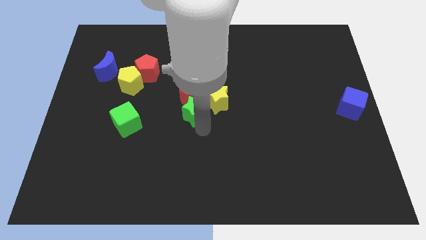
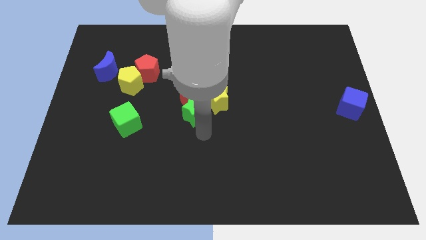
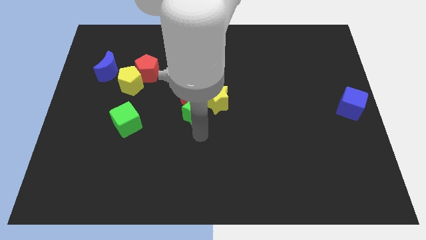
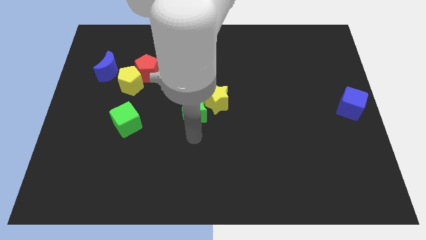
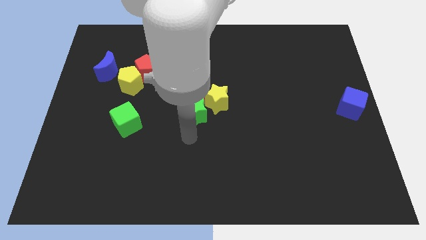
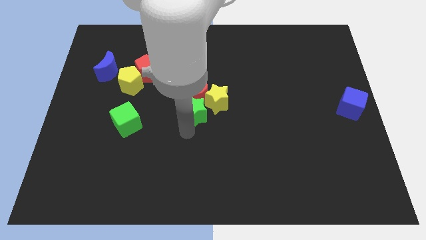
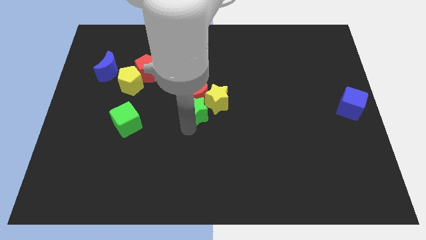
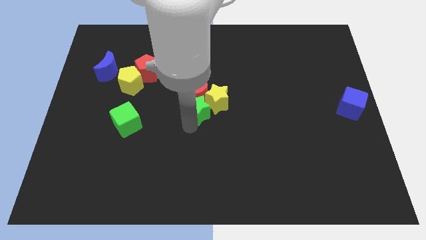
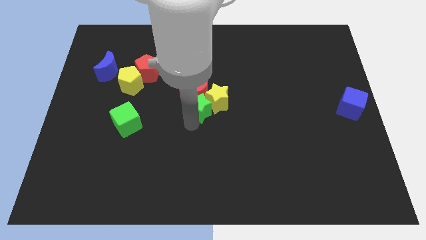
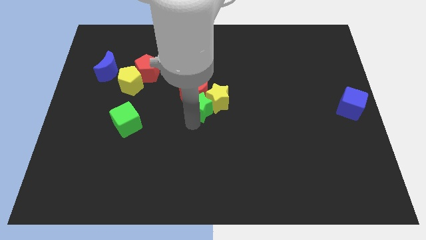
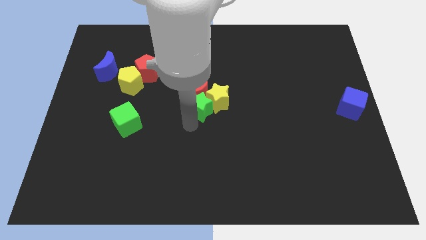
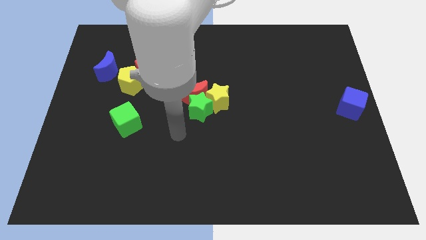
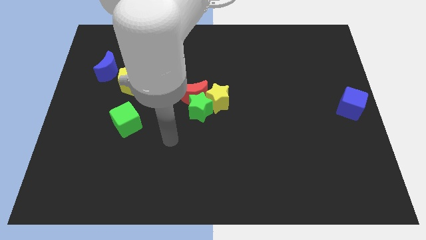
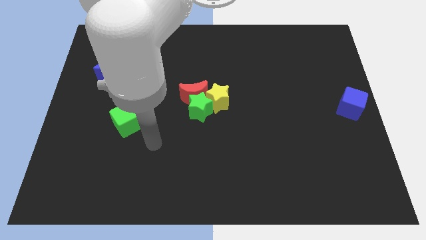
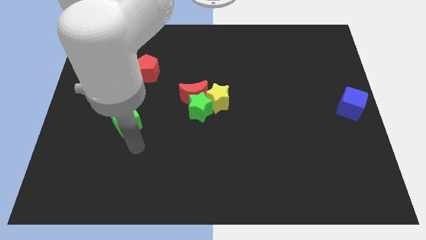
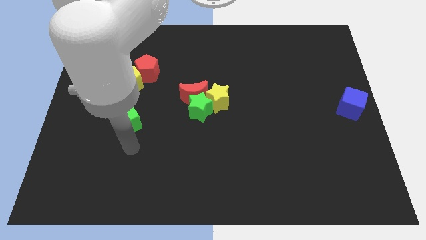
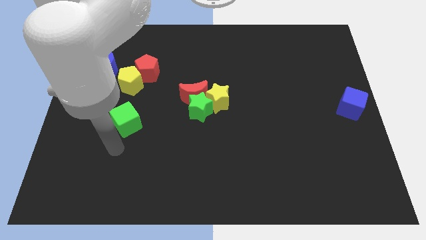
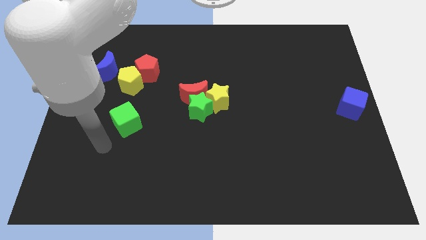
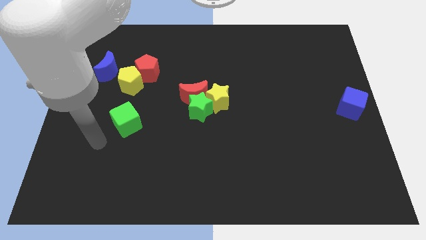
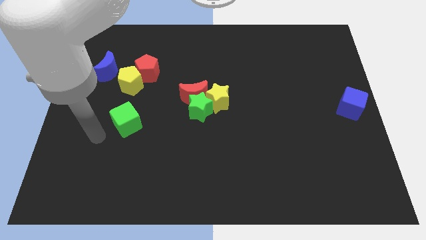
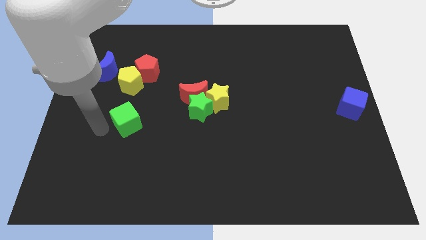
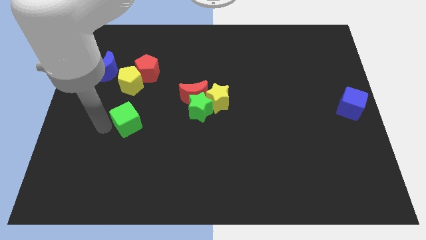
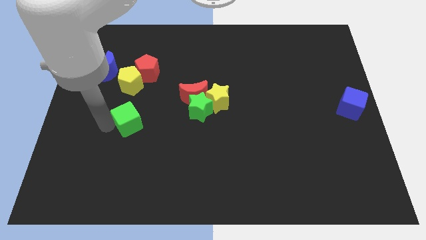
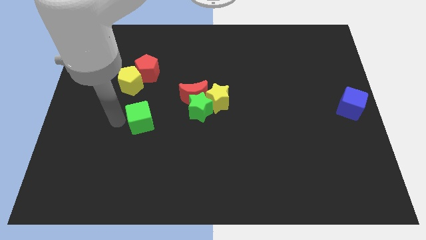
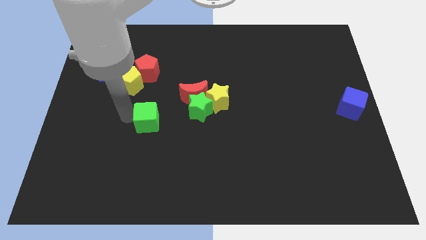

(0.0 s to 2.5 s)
move arm near green cube

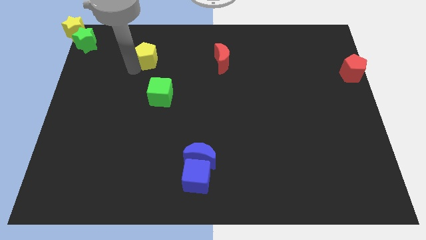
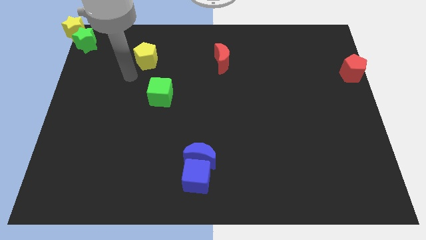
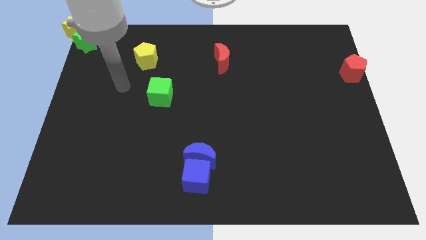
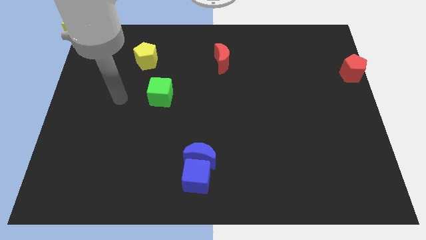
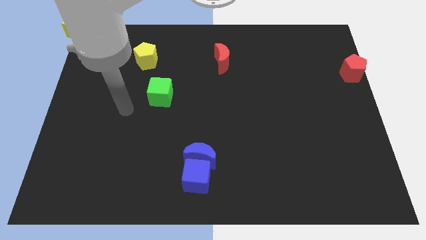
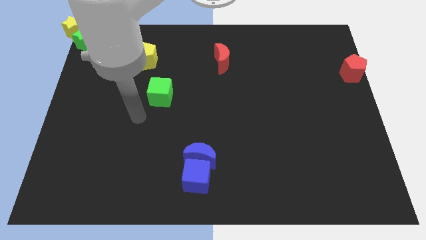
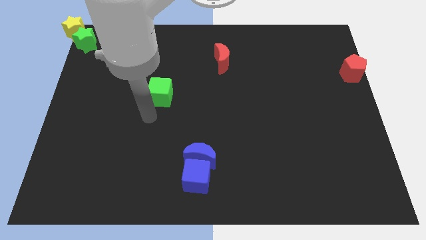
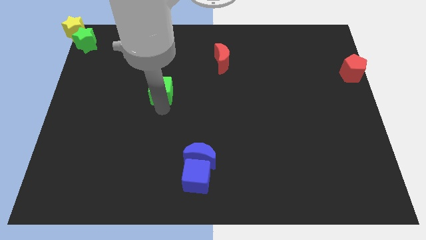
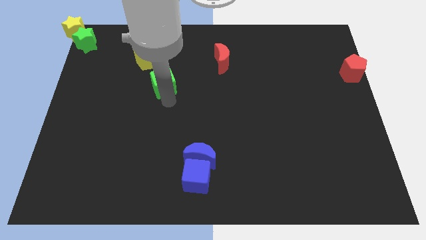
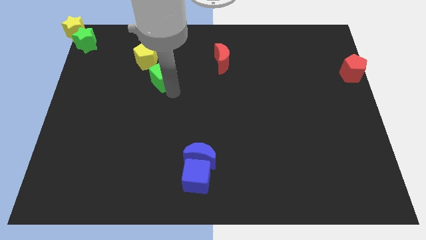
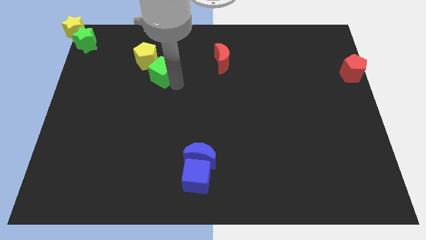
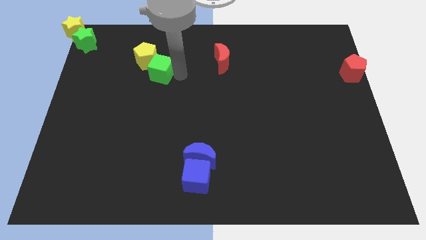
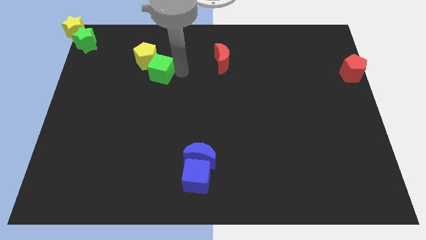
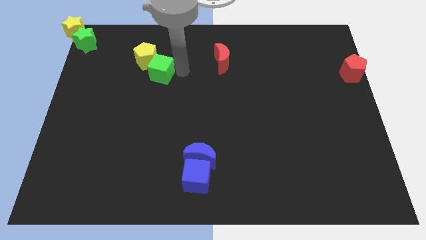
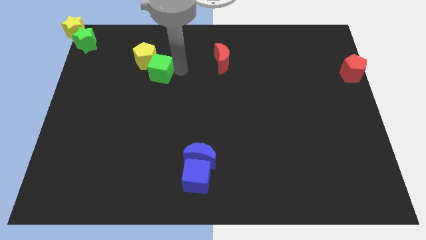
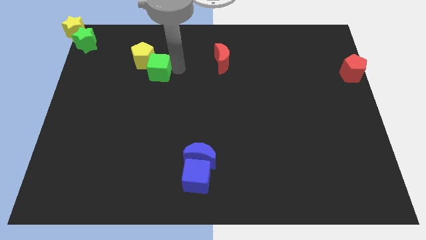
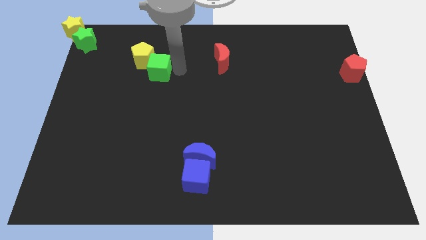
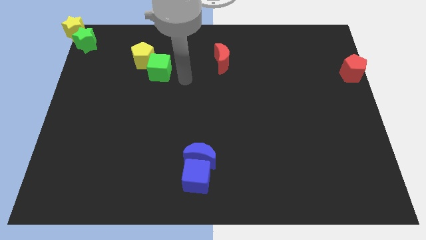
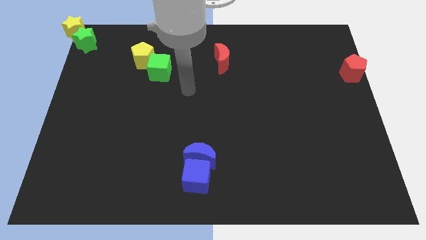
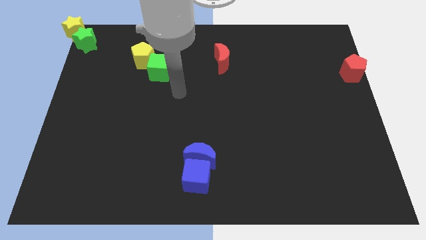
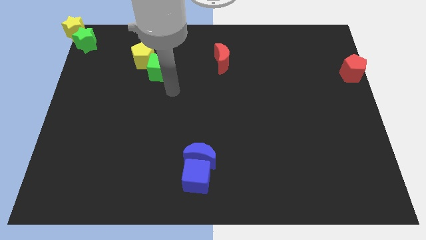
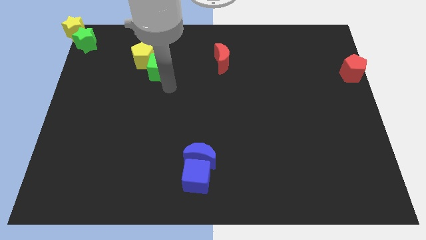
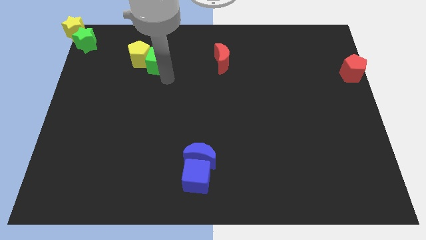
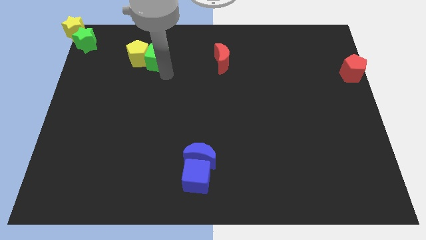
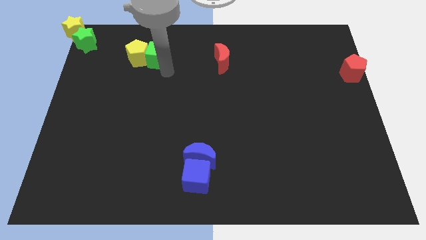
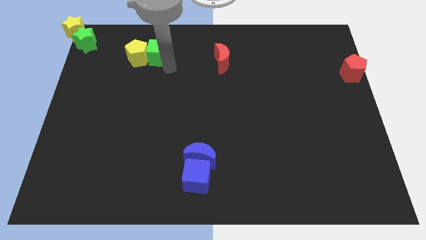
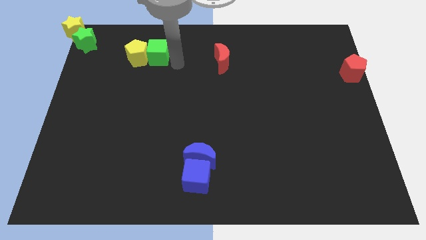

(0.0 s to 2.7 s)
push the green cube right to the yellow pentagon

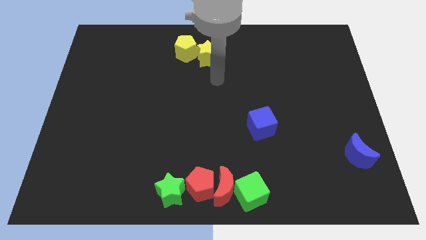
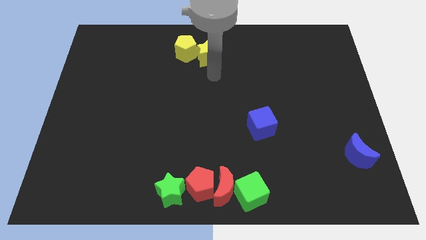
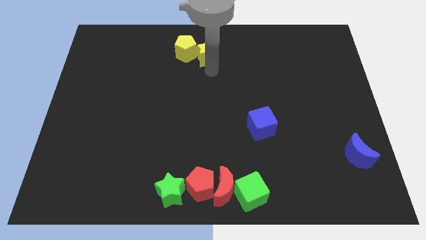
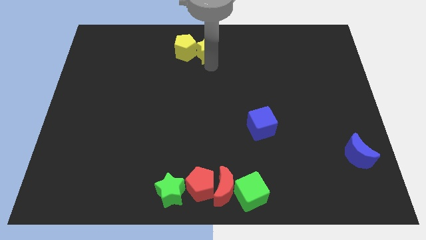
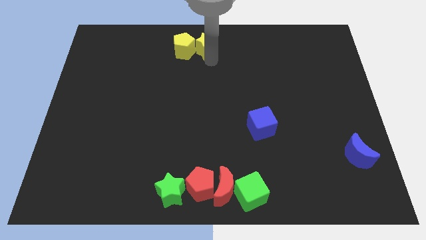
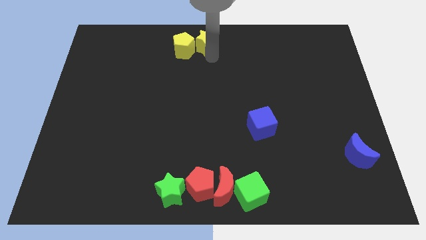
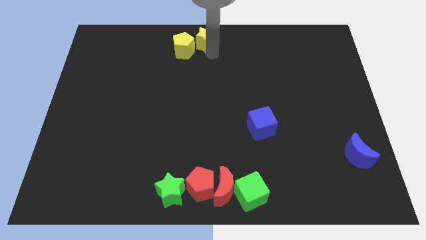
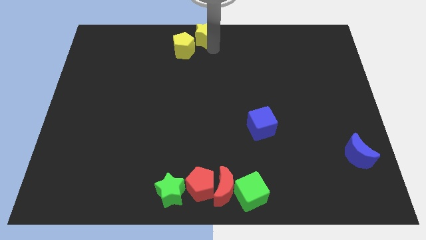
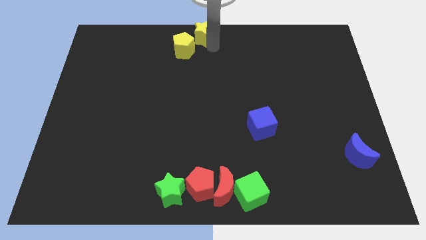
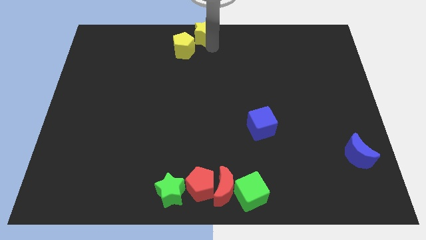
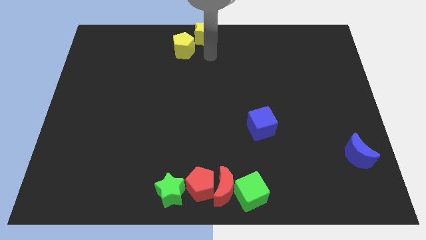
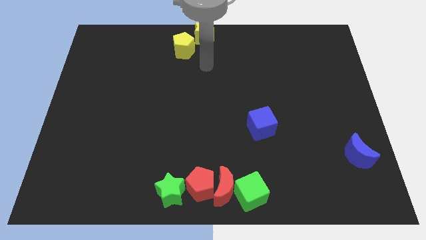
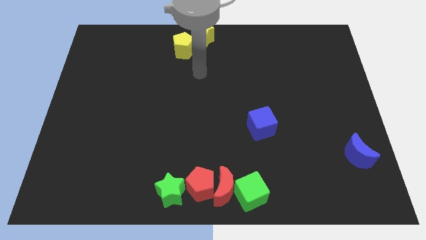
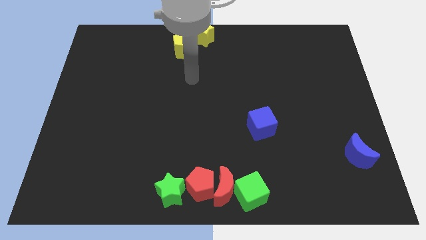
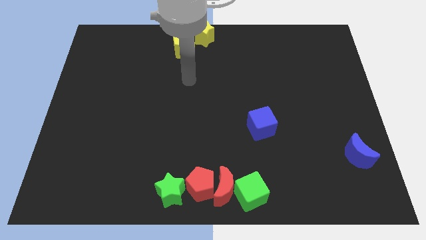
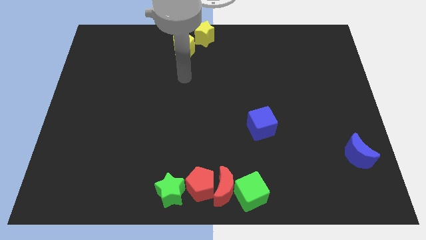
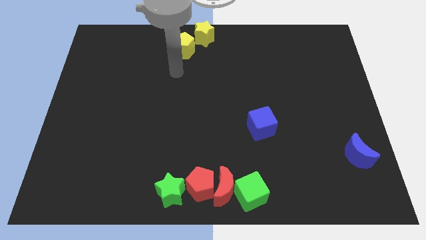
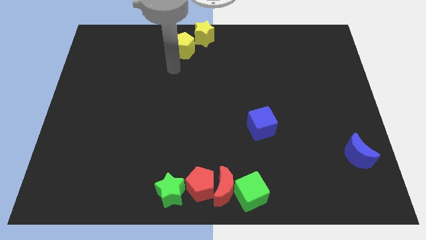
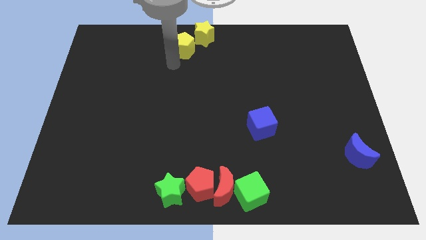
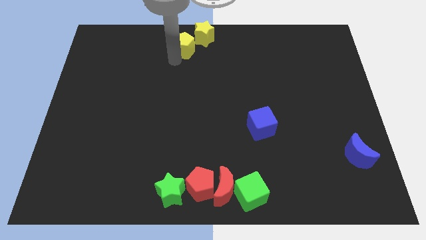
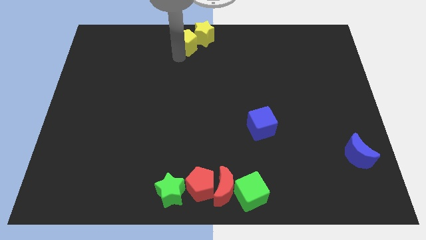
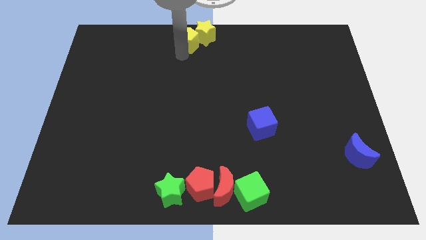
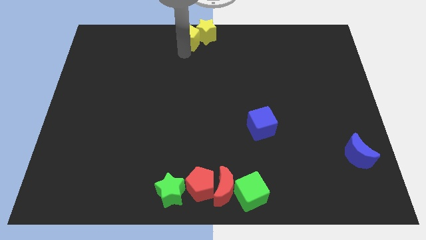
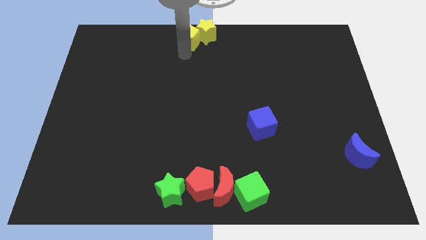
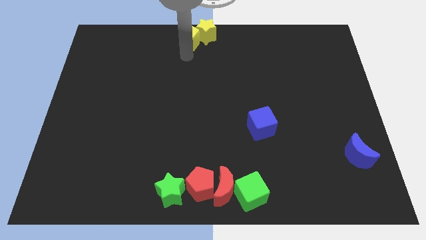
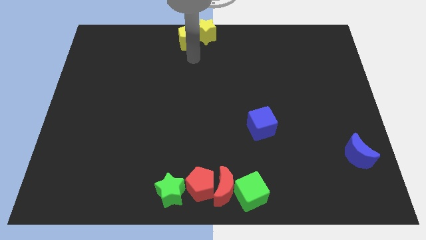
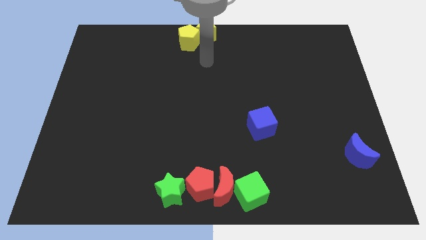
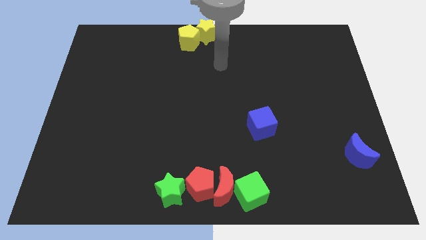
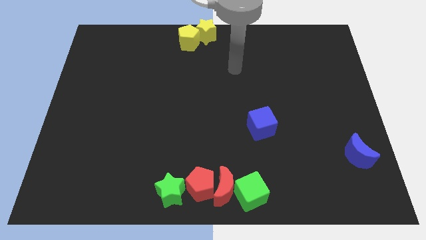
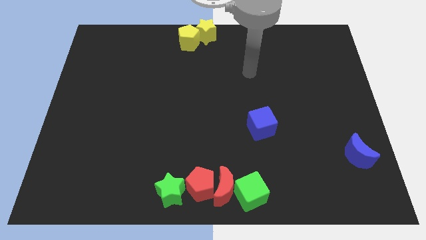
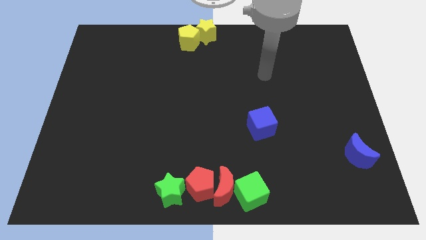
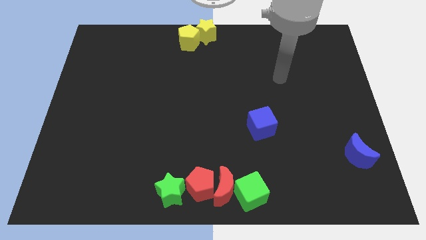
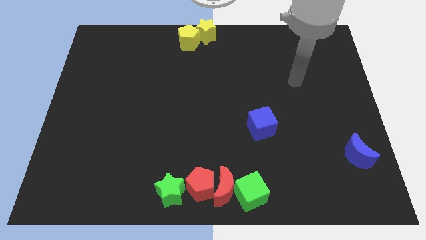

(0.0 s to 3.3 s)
push the yellow star towards the top center of the board

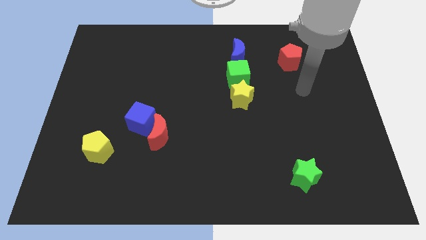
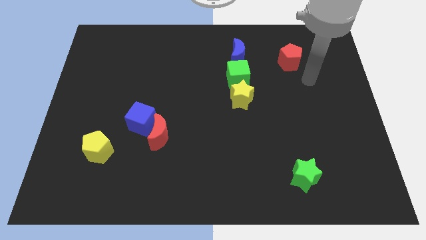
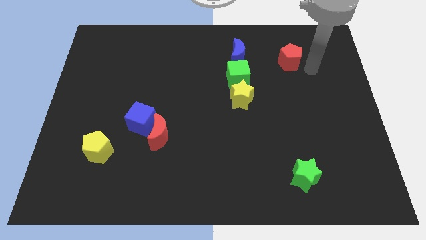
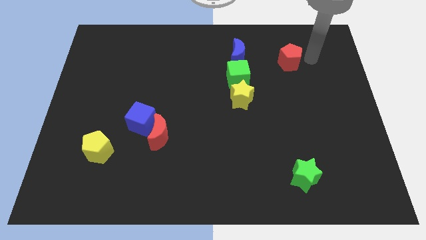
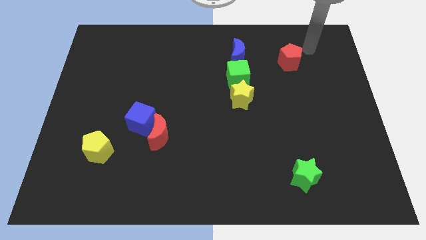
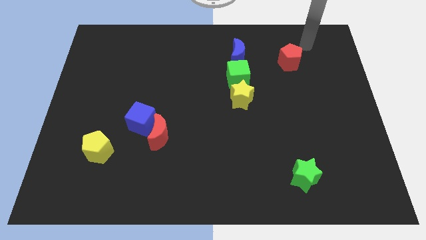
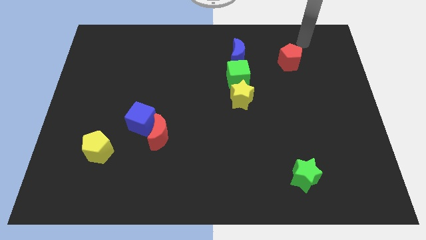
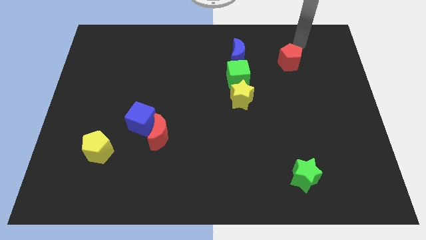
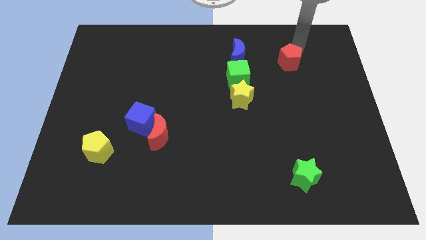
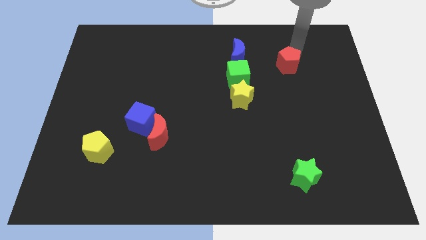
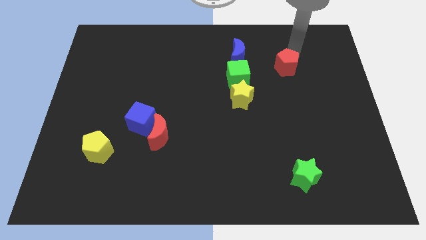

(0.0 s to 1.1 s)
tap red pentagon on its top
